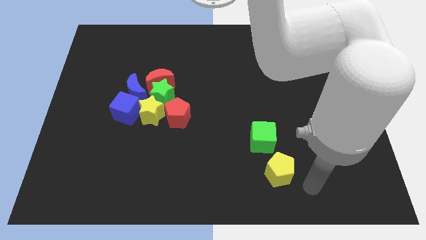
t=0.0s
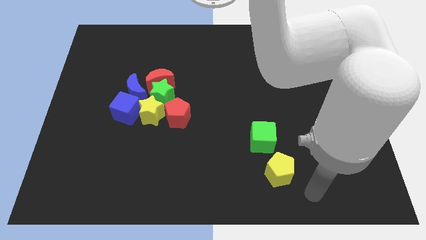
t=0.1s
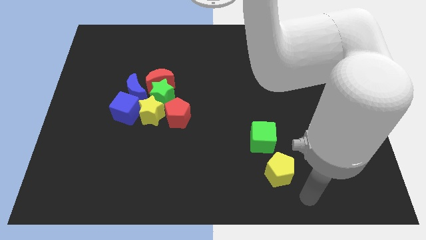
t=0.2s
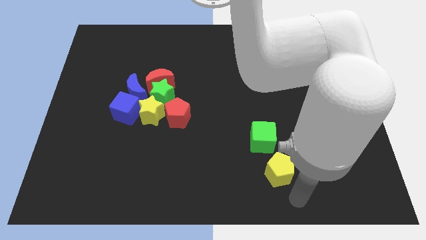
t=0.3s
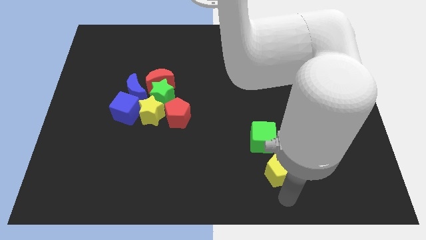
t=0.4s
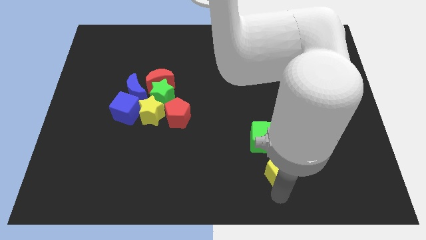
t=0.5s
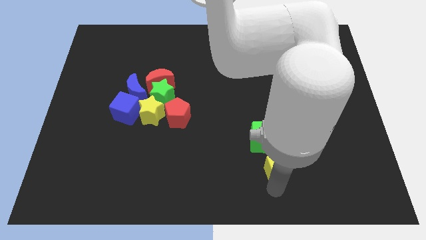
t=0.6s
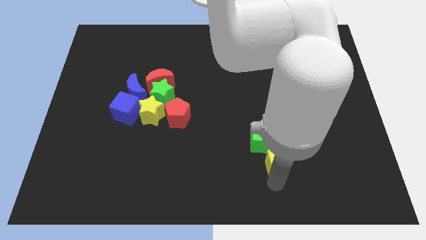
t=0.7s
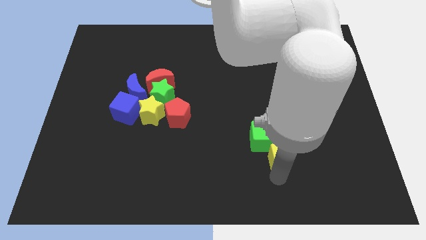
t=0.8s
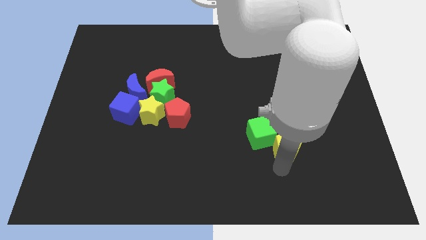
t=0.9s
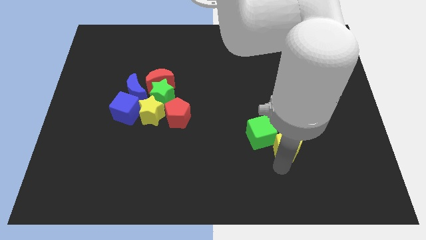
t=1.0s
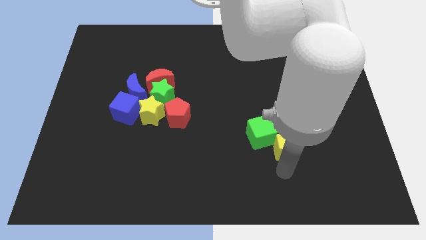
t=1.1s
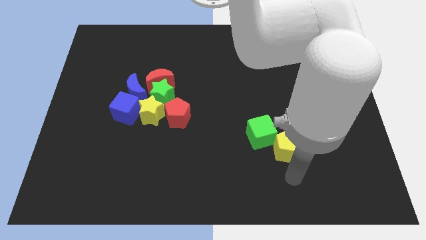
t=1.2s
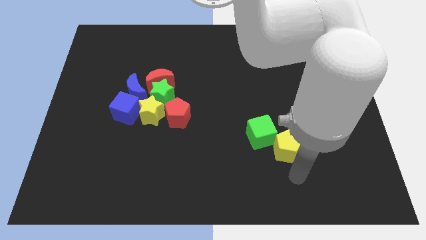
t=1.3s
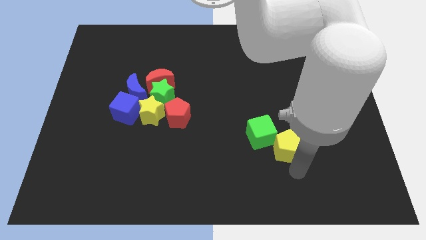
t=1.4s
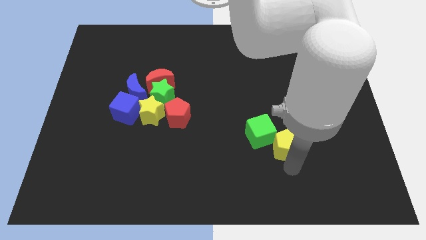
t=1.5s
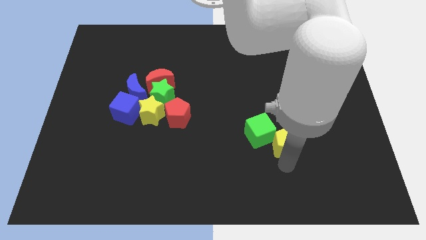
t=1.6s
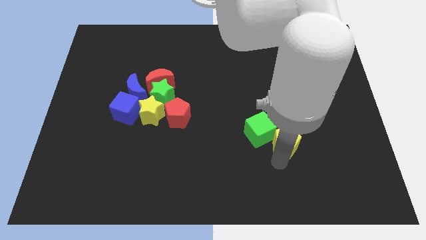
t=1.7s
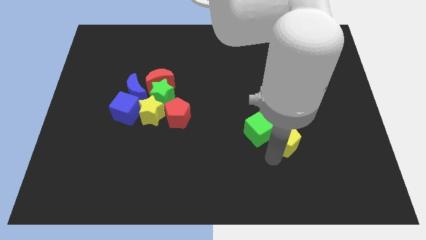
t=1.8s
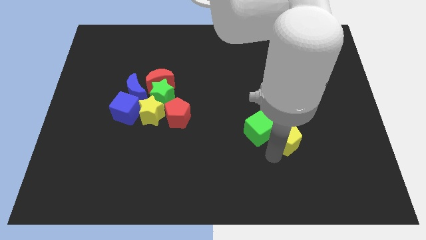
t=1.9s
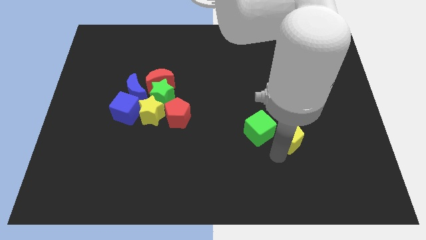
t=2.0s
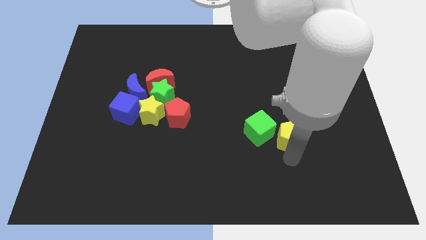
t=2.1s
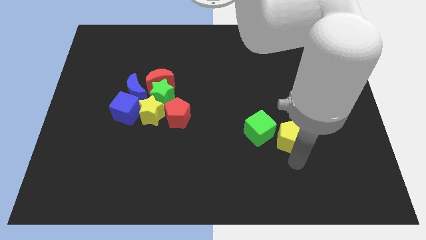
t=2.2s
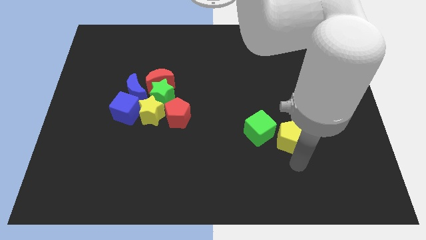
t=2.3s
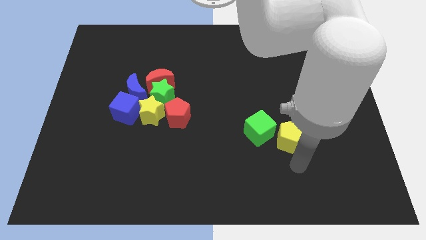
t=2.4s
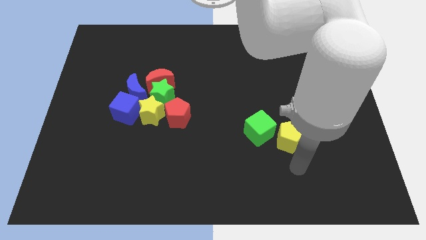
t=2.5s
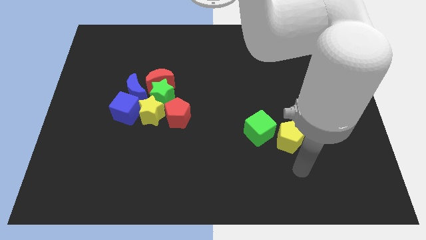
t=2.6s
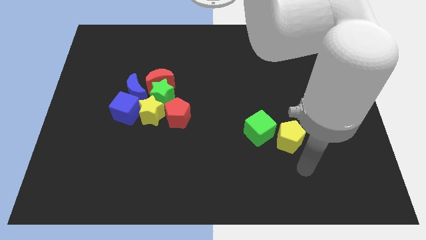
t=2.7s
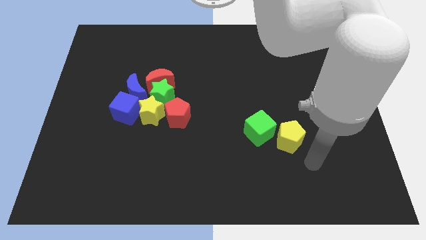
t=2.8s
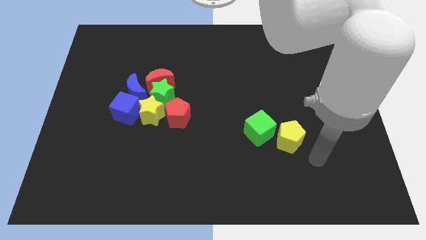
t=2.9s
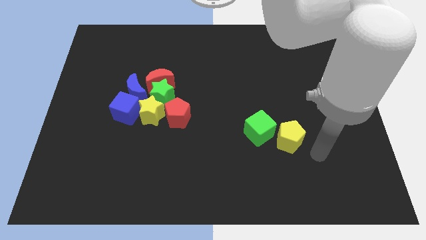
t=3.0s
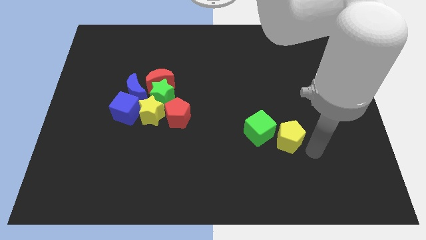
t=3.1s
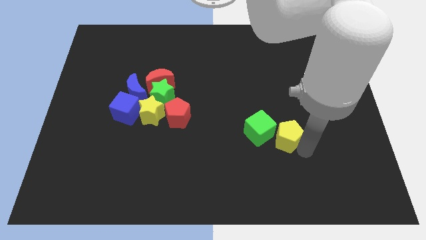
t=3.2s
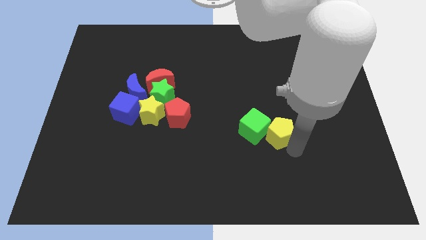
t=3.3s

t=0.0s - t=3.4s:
move the yellow pentagon to the right side of the green cube

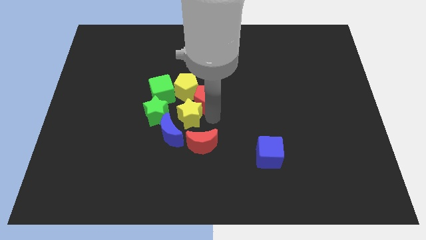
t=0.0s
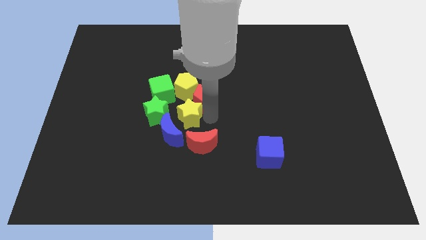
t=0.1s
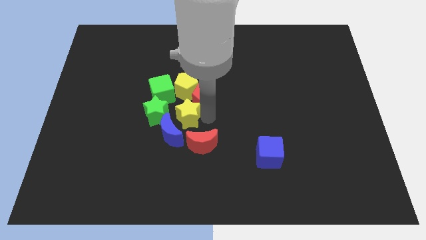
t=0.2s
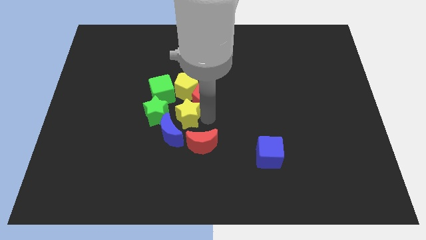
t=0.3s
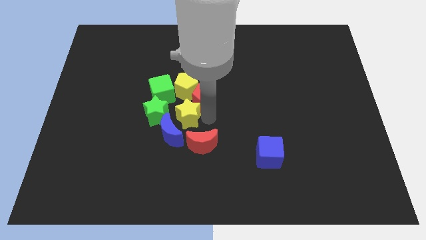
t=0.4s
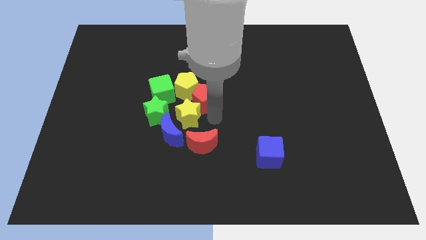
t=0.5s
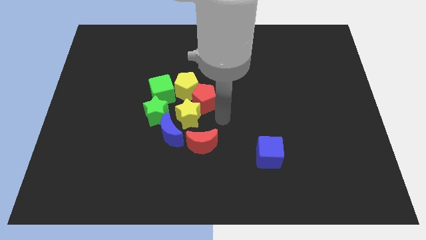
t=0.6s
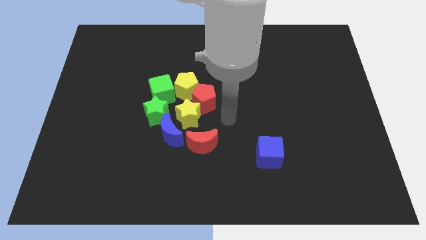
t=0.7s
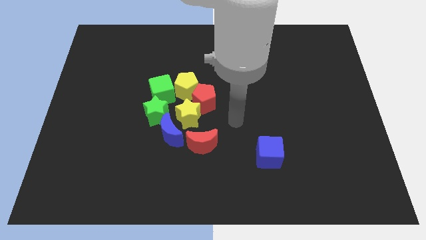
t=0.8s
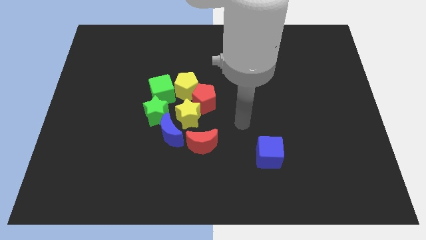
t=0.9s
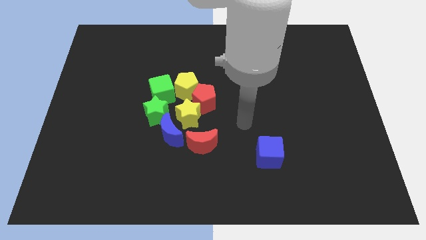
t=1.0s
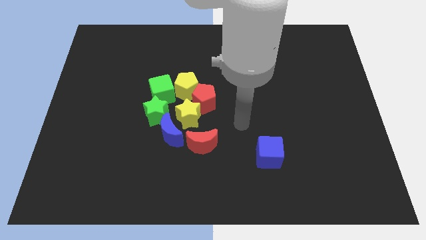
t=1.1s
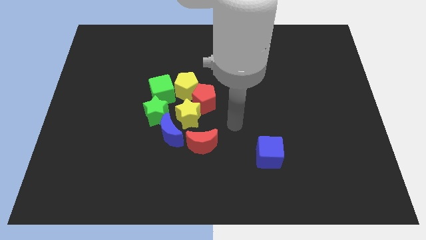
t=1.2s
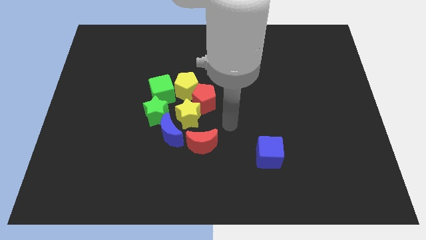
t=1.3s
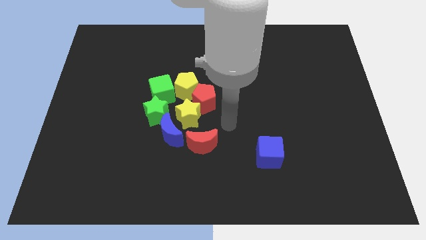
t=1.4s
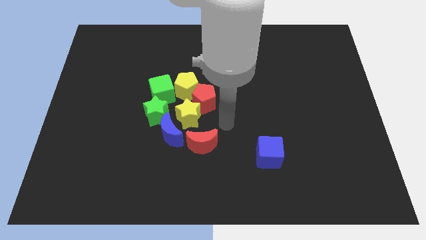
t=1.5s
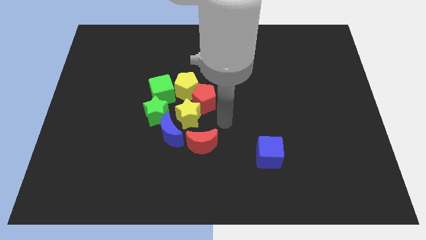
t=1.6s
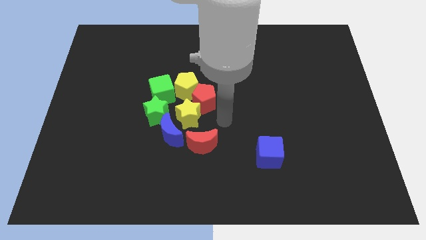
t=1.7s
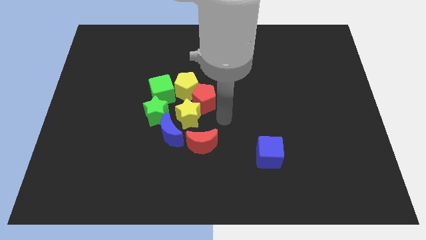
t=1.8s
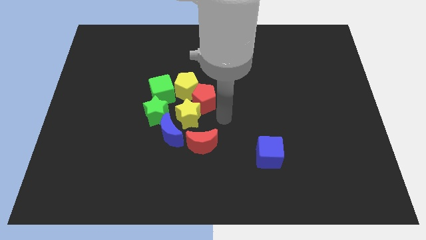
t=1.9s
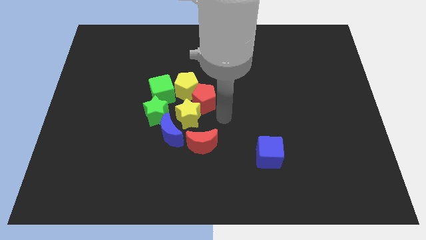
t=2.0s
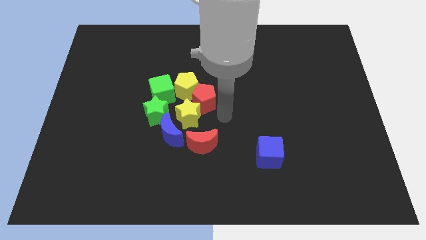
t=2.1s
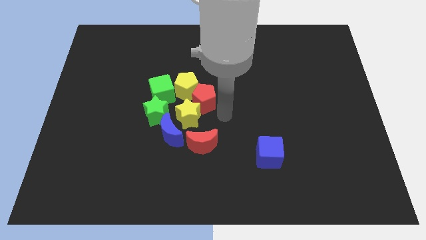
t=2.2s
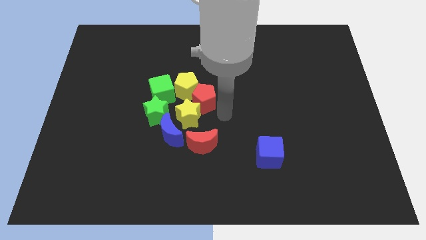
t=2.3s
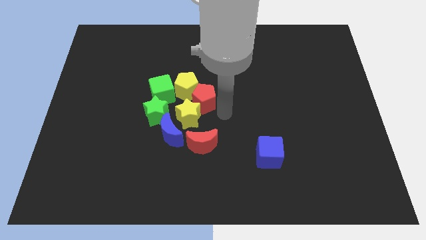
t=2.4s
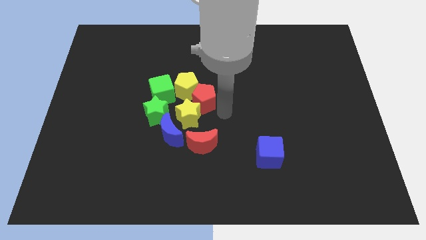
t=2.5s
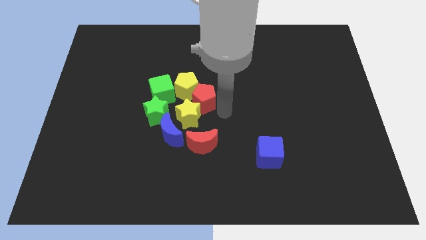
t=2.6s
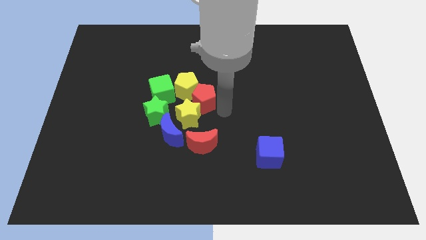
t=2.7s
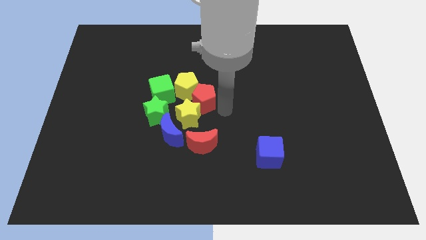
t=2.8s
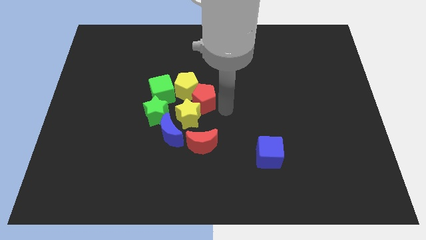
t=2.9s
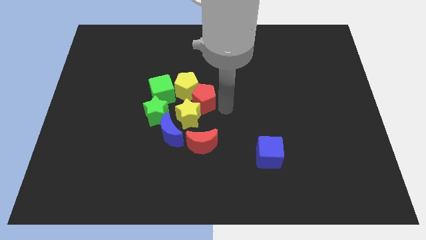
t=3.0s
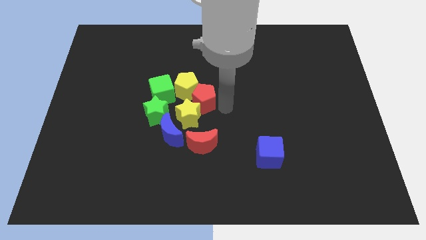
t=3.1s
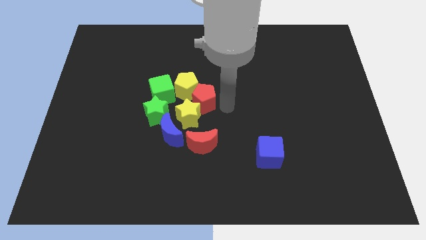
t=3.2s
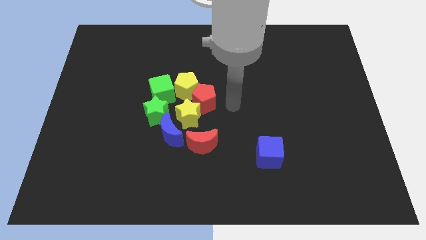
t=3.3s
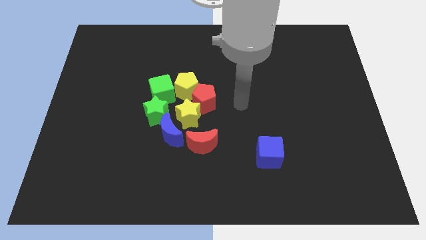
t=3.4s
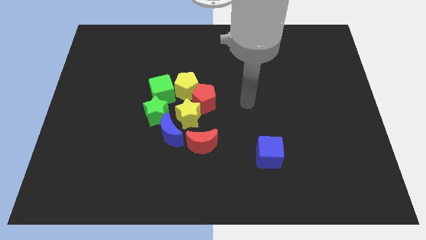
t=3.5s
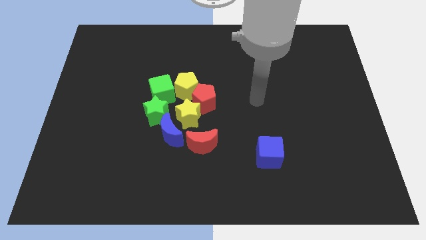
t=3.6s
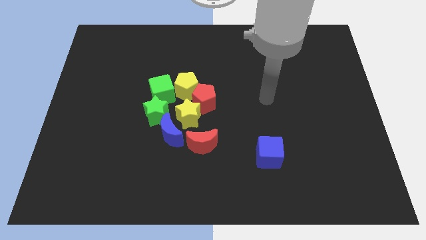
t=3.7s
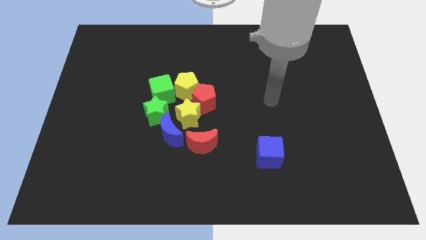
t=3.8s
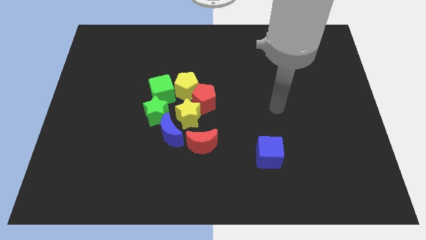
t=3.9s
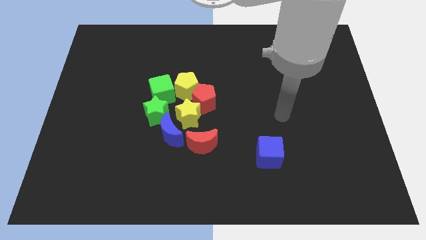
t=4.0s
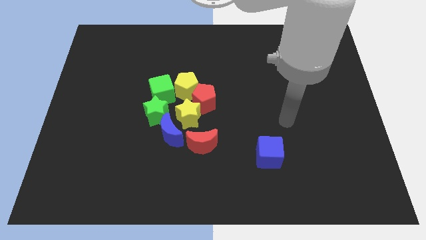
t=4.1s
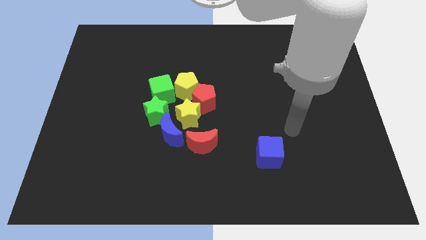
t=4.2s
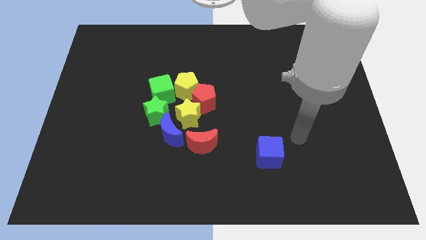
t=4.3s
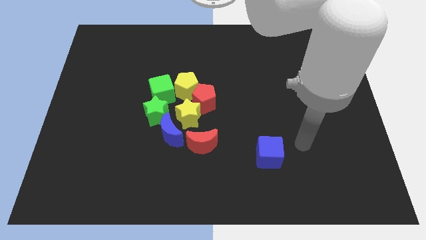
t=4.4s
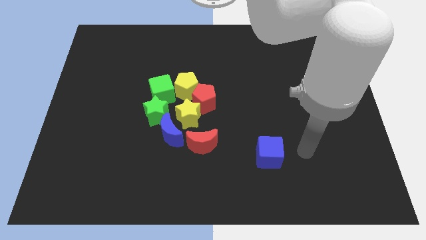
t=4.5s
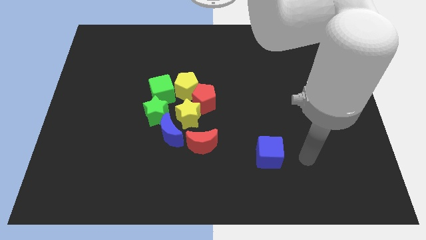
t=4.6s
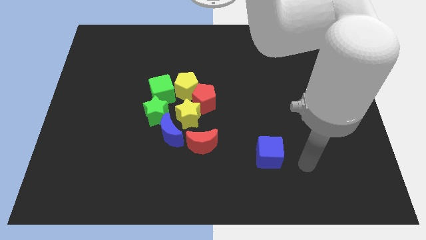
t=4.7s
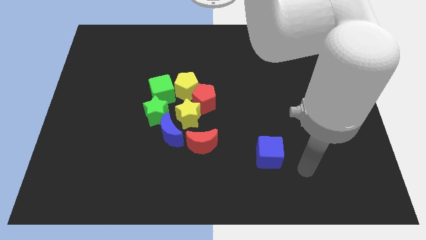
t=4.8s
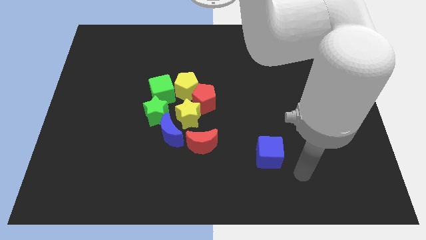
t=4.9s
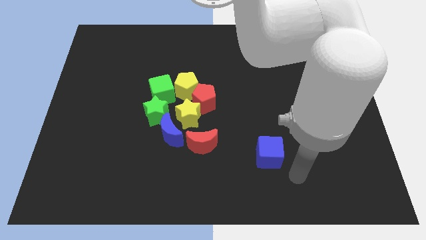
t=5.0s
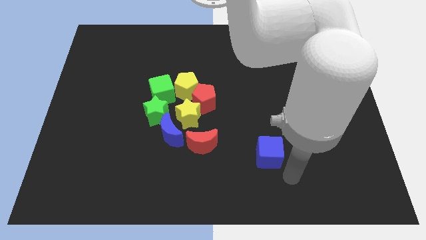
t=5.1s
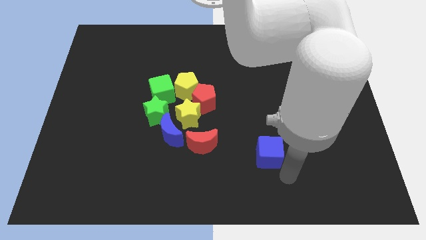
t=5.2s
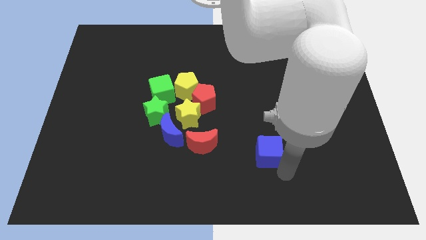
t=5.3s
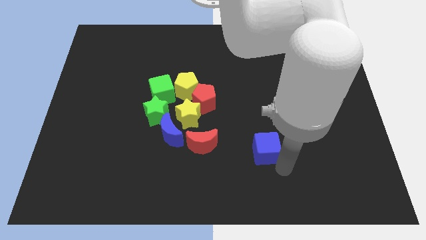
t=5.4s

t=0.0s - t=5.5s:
move your arm to the bottom of the blue cube
